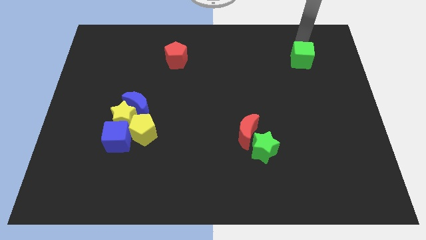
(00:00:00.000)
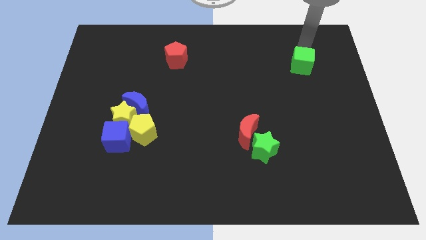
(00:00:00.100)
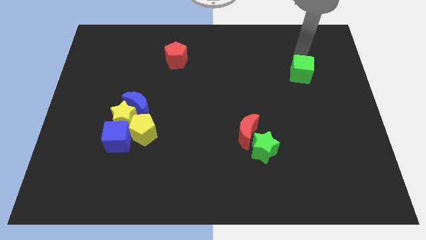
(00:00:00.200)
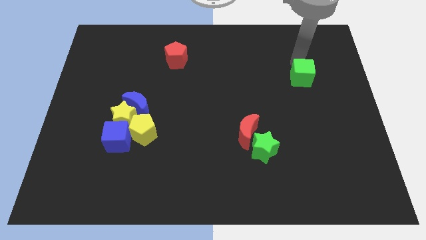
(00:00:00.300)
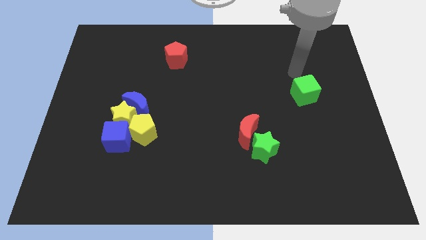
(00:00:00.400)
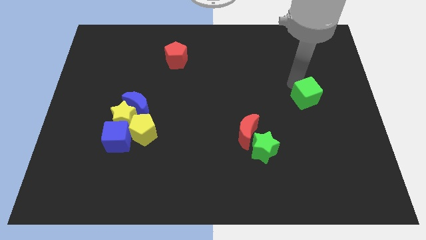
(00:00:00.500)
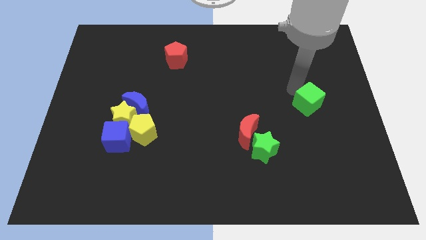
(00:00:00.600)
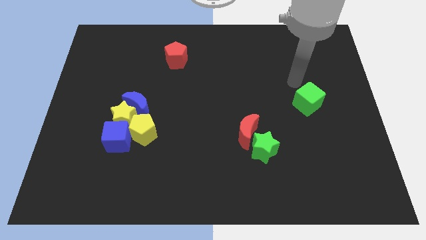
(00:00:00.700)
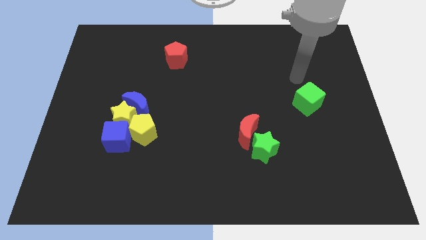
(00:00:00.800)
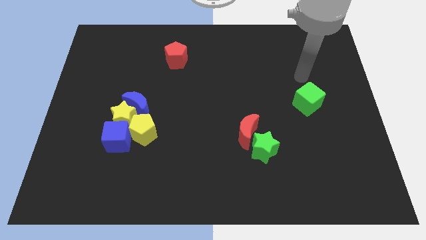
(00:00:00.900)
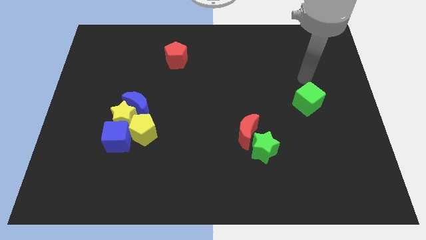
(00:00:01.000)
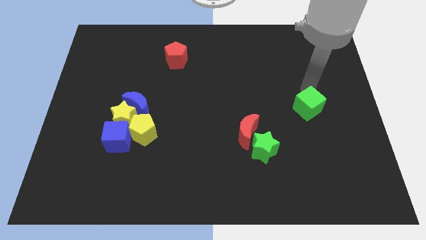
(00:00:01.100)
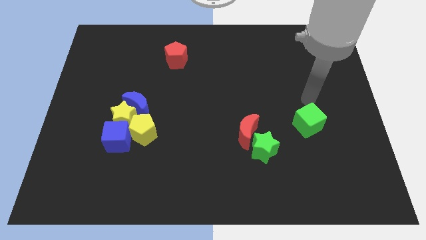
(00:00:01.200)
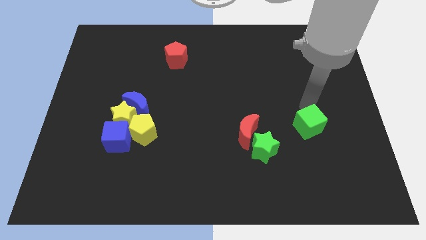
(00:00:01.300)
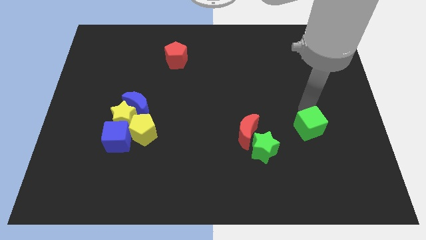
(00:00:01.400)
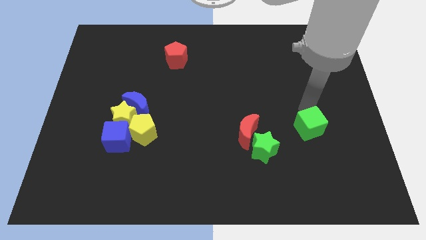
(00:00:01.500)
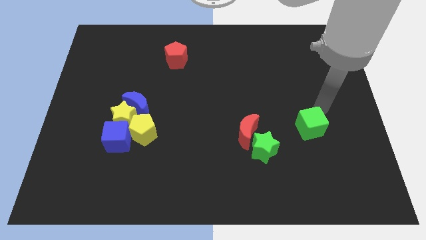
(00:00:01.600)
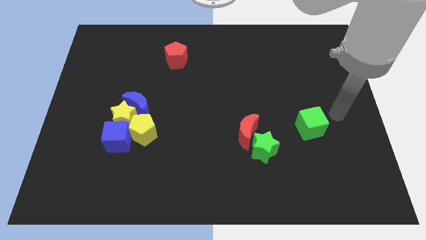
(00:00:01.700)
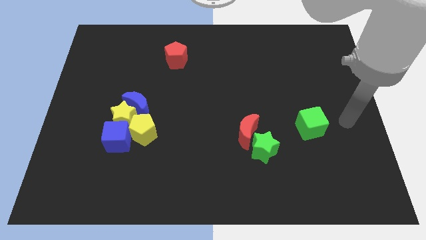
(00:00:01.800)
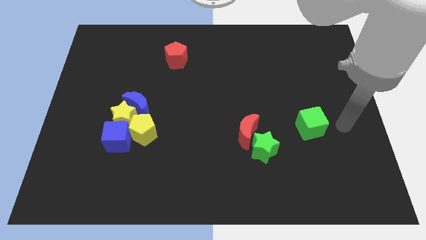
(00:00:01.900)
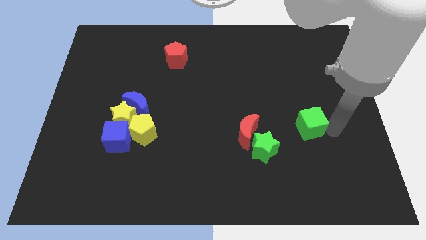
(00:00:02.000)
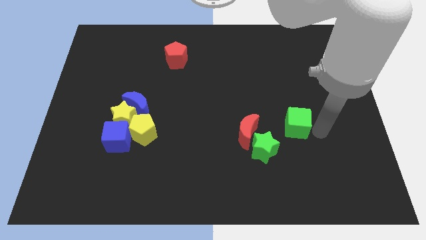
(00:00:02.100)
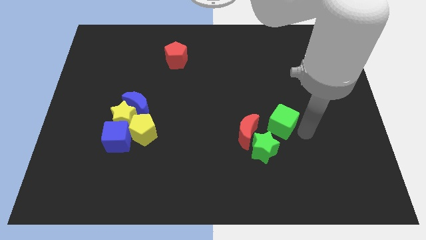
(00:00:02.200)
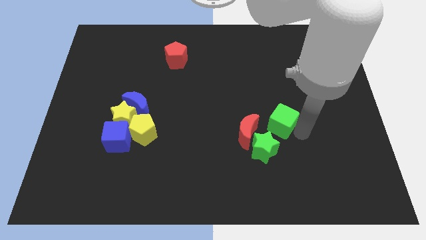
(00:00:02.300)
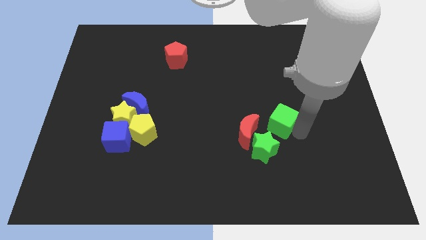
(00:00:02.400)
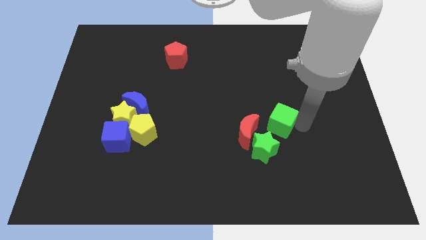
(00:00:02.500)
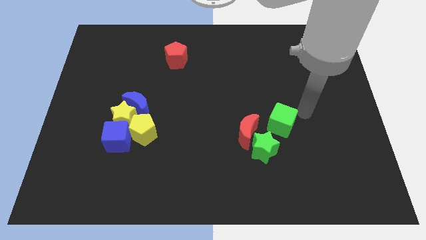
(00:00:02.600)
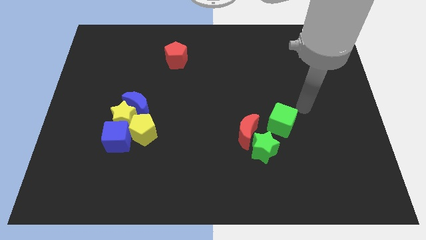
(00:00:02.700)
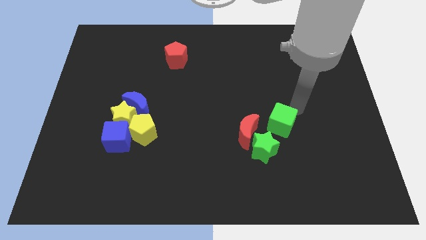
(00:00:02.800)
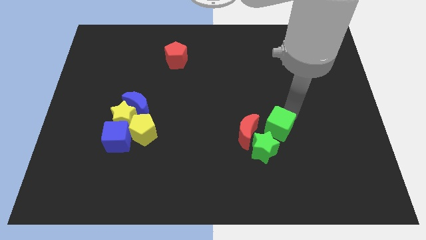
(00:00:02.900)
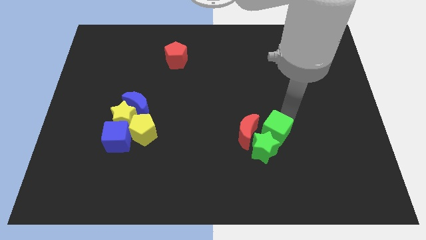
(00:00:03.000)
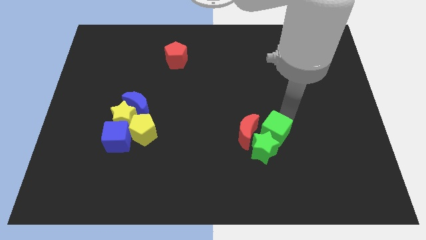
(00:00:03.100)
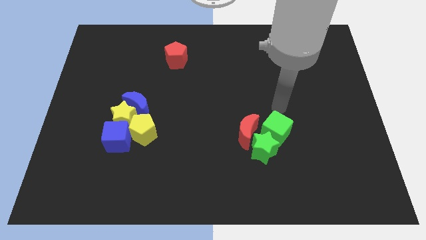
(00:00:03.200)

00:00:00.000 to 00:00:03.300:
slide the green cube into the top side of the green star

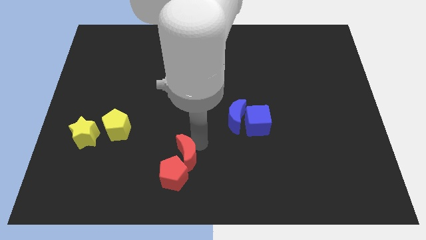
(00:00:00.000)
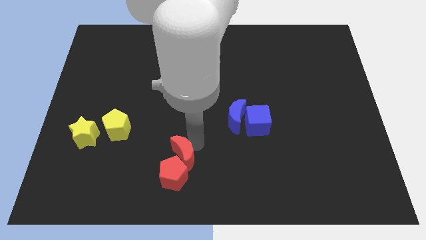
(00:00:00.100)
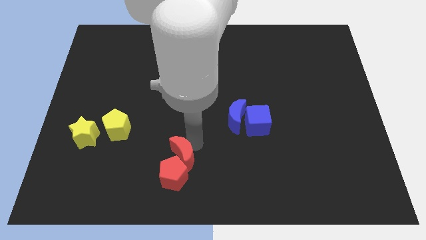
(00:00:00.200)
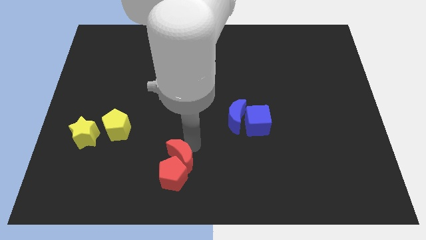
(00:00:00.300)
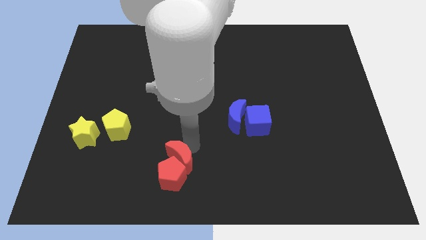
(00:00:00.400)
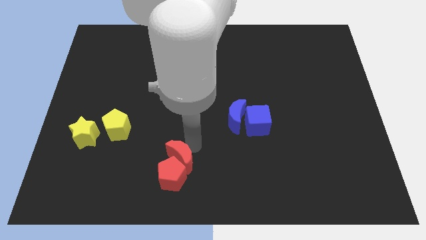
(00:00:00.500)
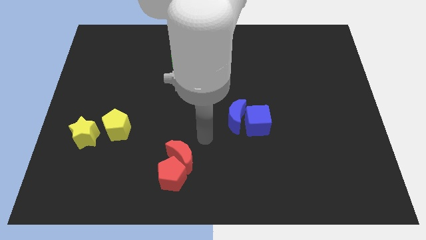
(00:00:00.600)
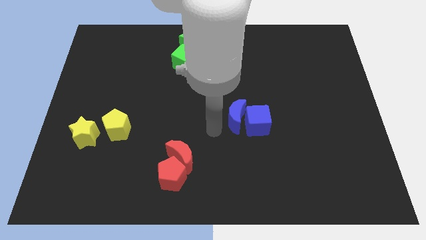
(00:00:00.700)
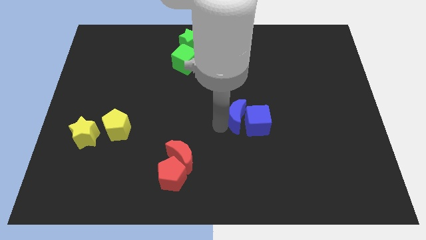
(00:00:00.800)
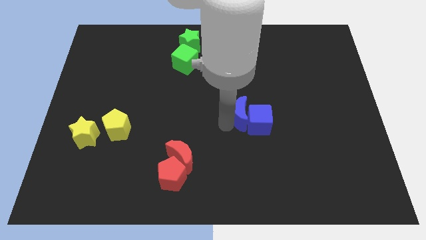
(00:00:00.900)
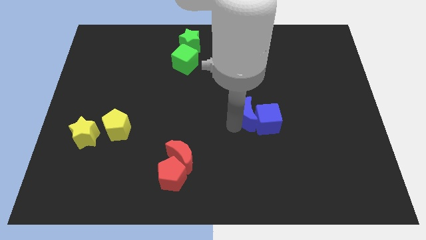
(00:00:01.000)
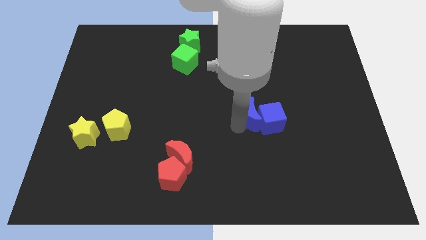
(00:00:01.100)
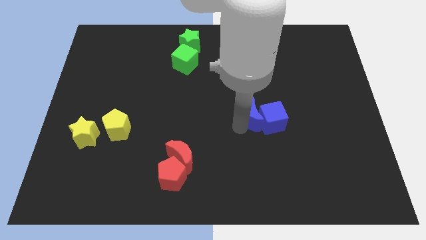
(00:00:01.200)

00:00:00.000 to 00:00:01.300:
push the blue blocks slightly to the right

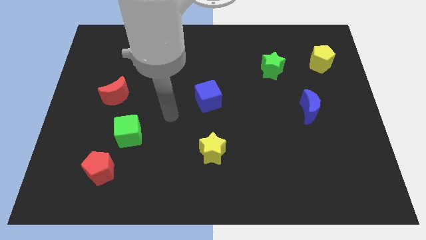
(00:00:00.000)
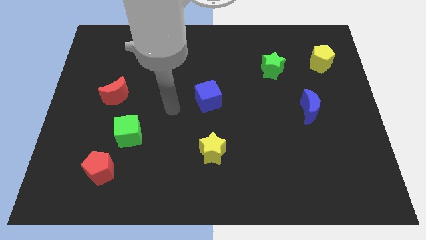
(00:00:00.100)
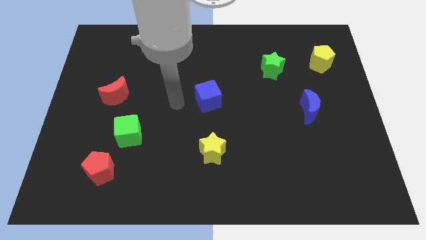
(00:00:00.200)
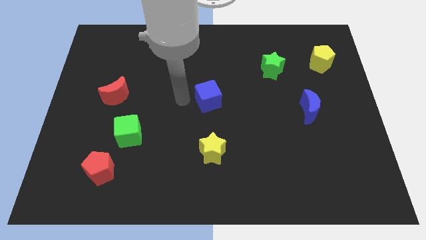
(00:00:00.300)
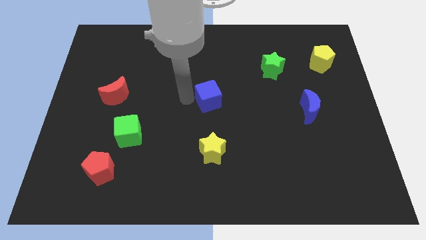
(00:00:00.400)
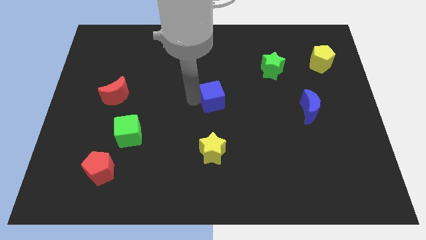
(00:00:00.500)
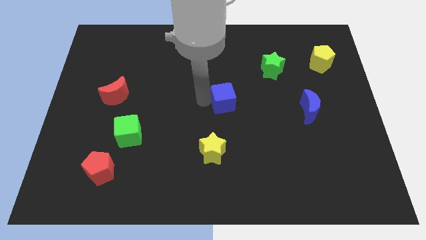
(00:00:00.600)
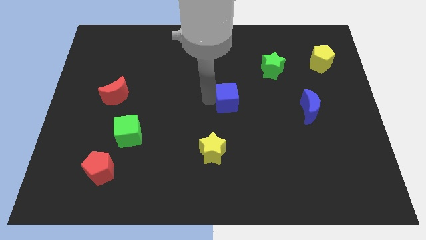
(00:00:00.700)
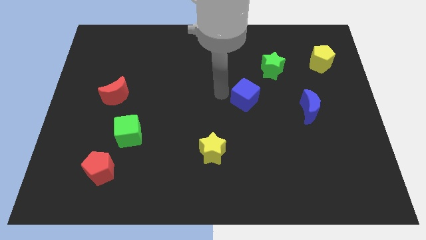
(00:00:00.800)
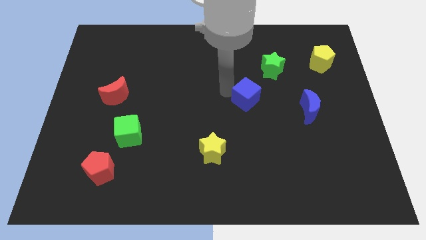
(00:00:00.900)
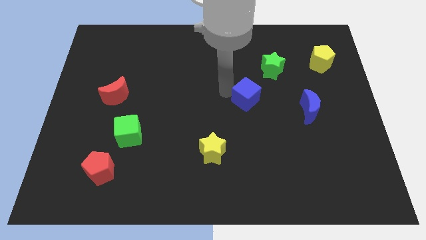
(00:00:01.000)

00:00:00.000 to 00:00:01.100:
move blue cube towards blue moon

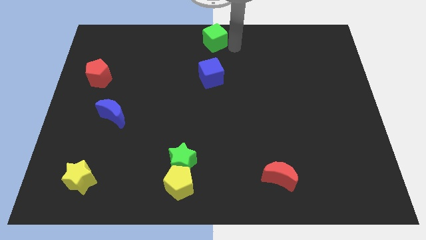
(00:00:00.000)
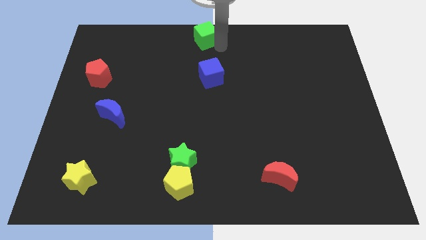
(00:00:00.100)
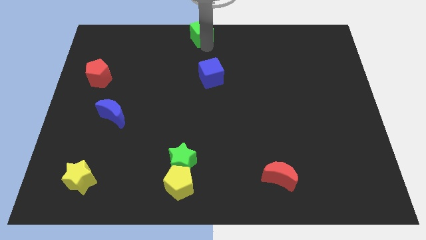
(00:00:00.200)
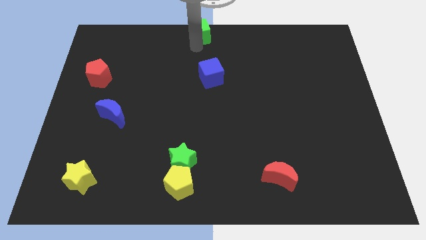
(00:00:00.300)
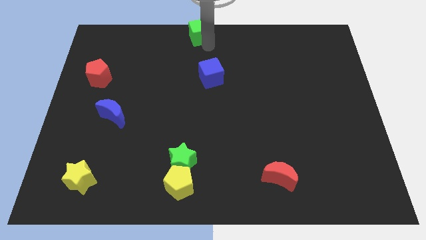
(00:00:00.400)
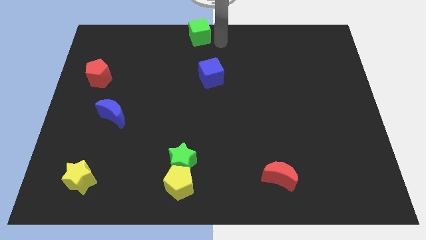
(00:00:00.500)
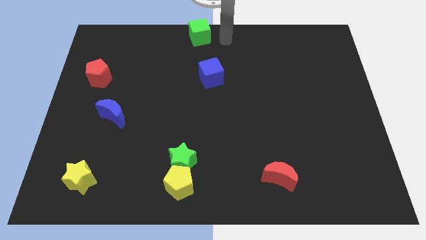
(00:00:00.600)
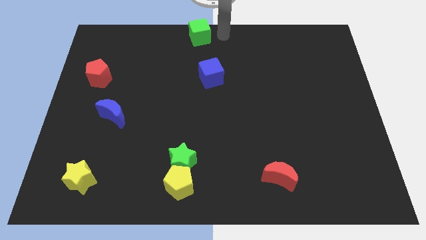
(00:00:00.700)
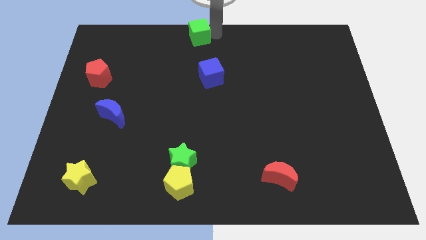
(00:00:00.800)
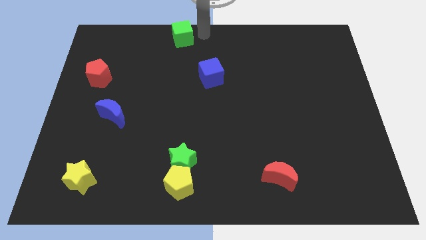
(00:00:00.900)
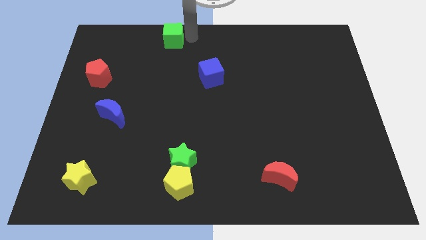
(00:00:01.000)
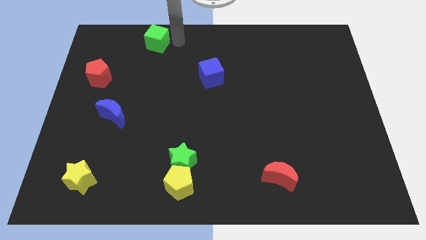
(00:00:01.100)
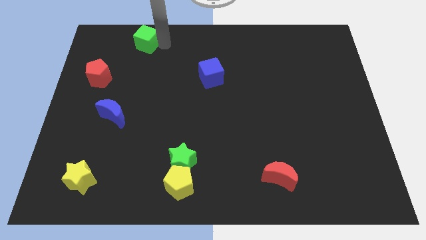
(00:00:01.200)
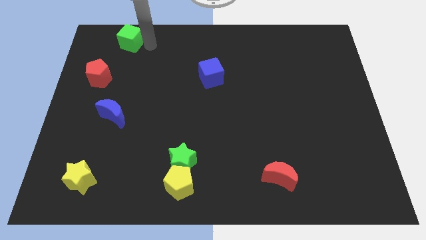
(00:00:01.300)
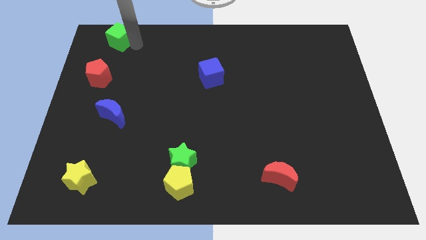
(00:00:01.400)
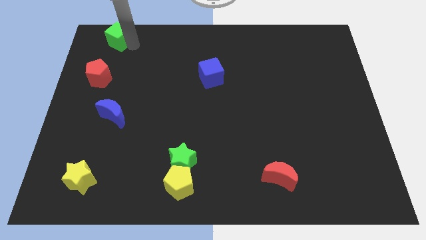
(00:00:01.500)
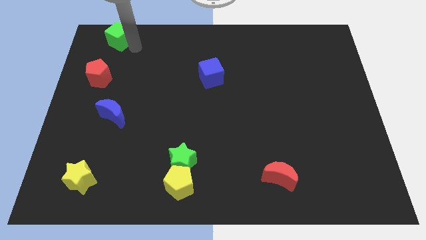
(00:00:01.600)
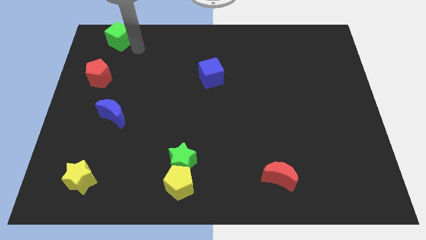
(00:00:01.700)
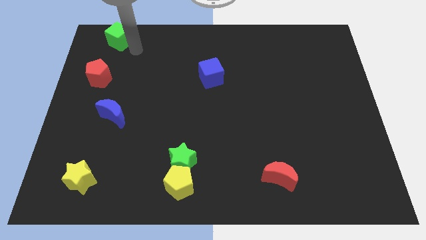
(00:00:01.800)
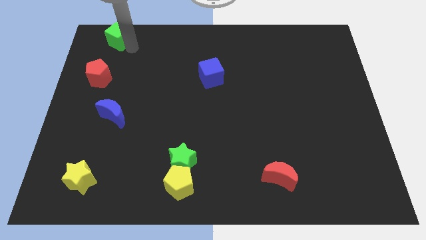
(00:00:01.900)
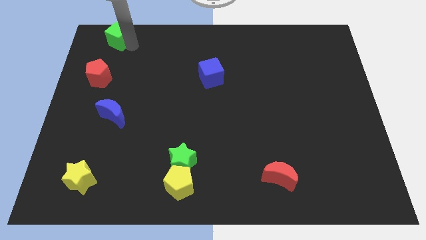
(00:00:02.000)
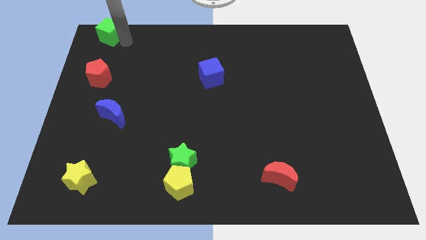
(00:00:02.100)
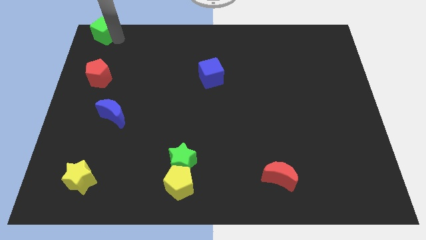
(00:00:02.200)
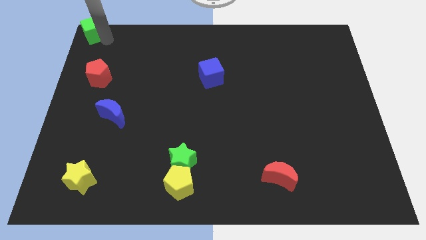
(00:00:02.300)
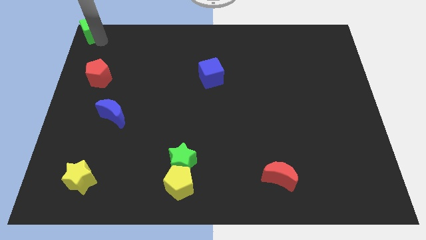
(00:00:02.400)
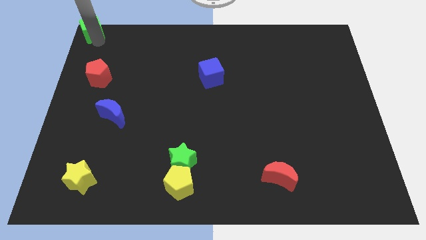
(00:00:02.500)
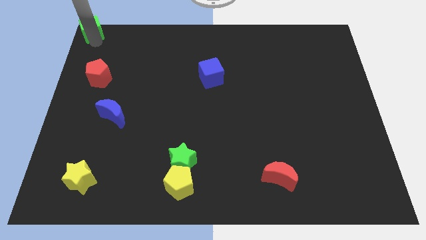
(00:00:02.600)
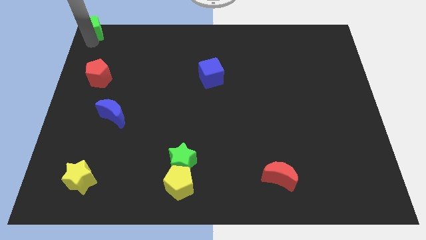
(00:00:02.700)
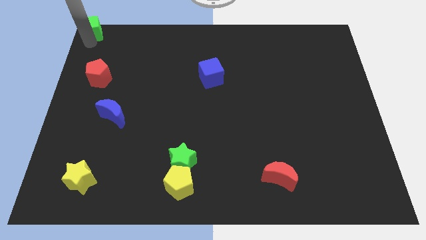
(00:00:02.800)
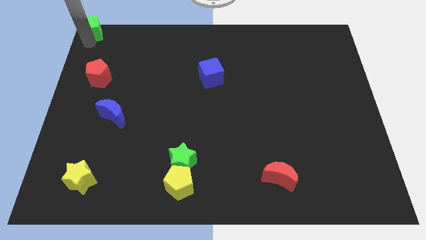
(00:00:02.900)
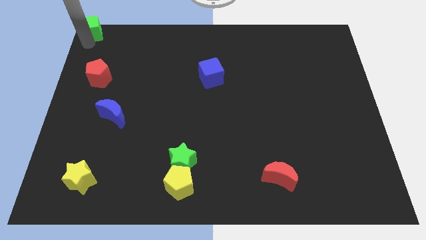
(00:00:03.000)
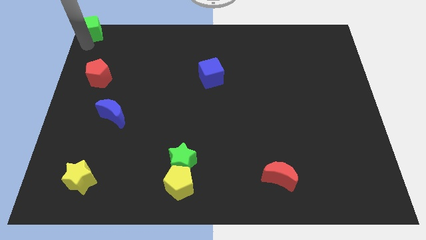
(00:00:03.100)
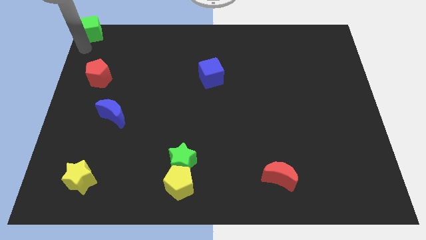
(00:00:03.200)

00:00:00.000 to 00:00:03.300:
move the green cube to the top left corner of the board
